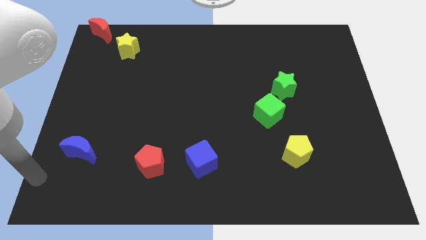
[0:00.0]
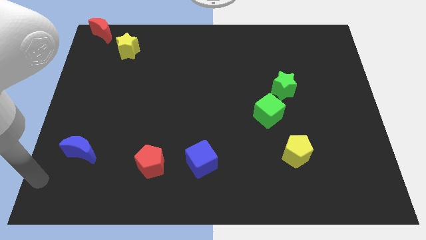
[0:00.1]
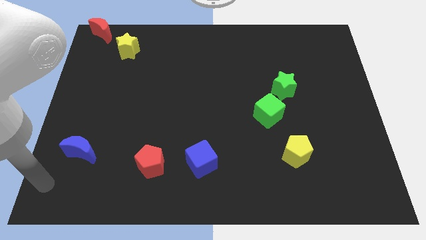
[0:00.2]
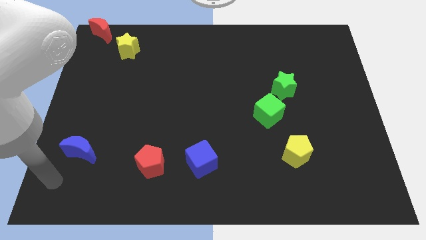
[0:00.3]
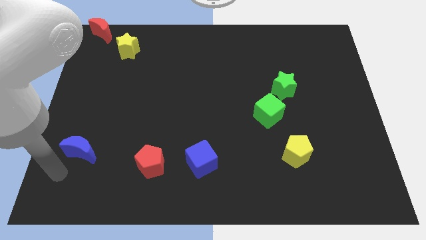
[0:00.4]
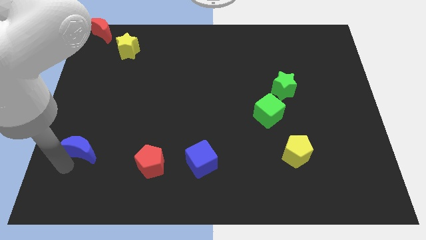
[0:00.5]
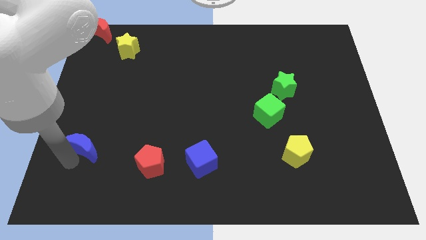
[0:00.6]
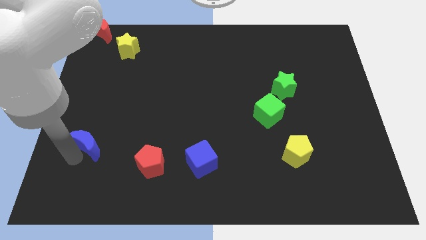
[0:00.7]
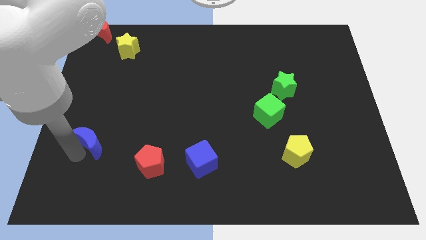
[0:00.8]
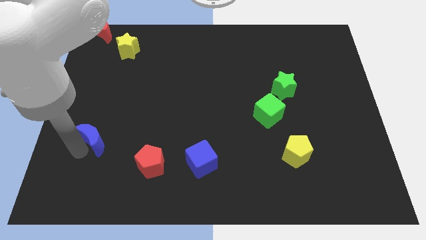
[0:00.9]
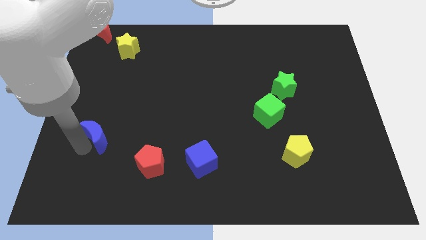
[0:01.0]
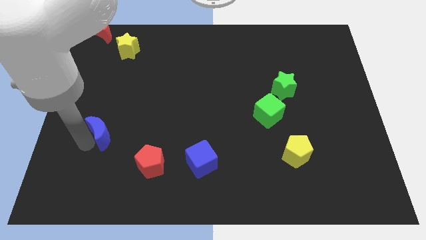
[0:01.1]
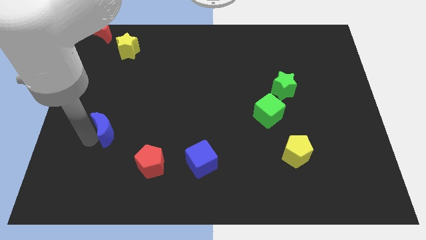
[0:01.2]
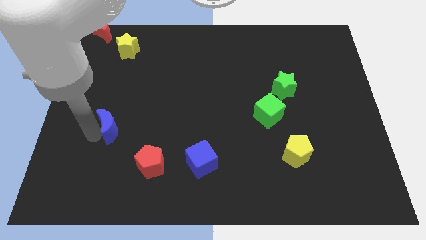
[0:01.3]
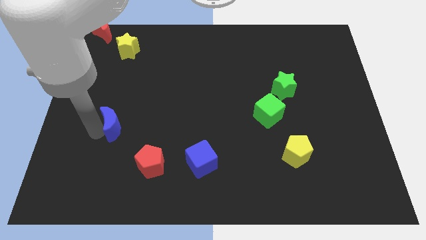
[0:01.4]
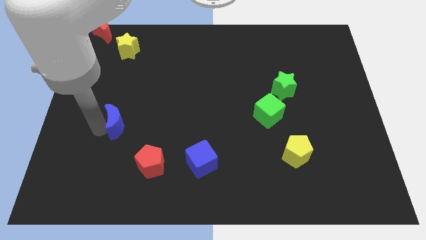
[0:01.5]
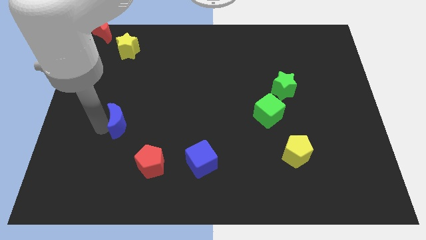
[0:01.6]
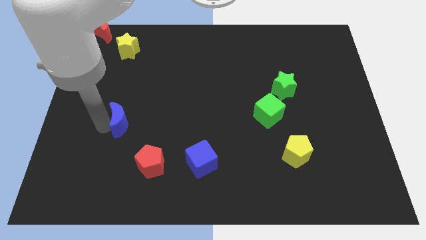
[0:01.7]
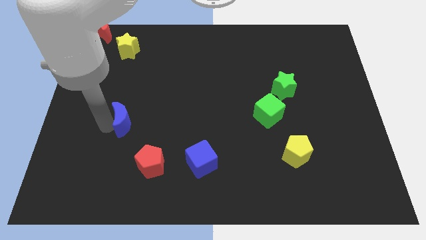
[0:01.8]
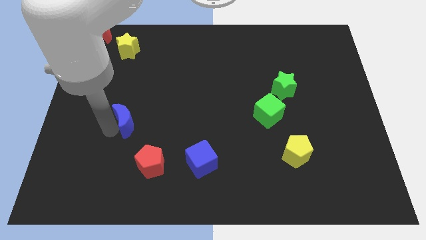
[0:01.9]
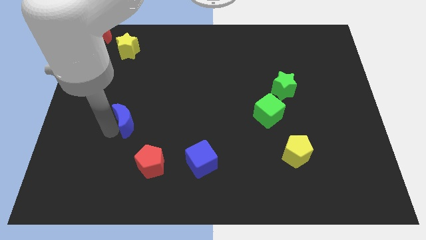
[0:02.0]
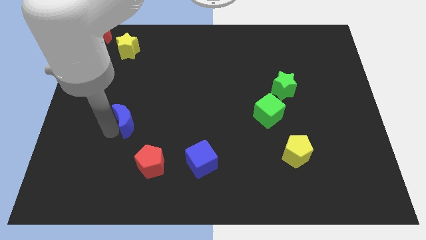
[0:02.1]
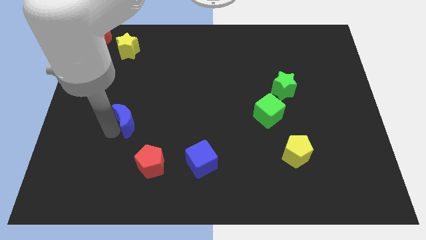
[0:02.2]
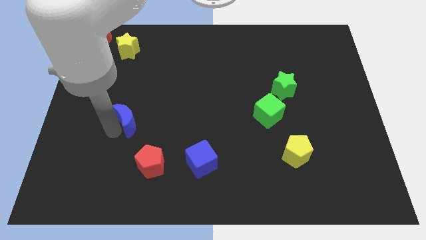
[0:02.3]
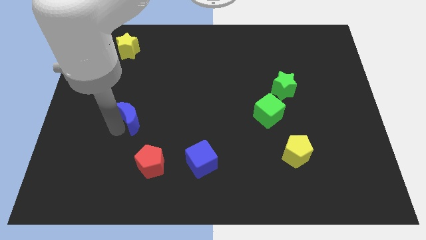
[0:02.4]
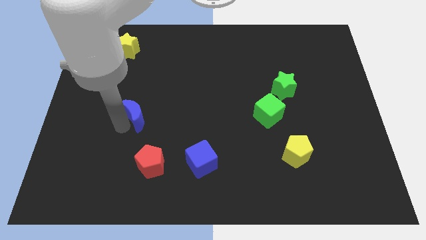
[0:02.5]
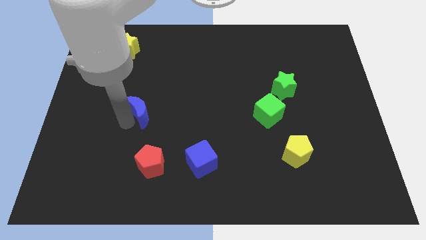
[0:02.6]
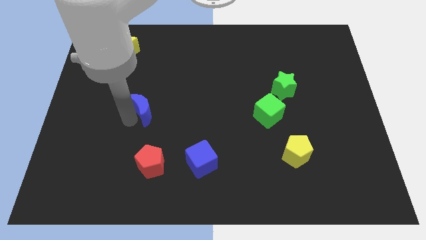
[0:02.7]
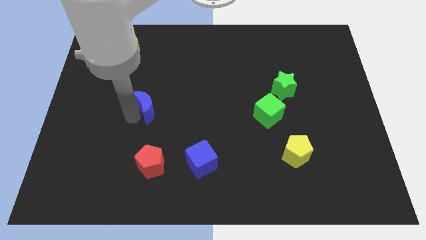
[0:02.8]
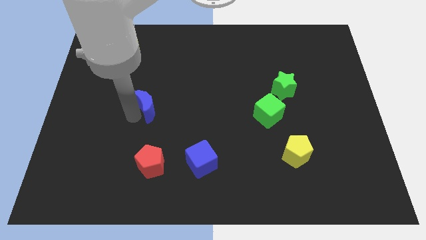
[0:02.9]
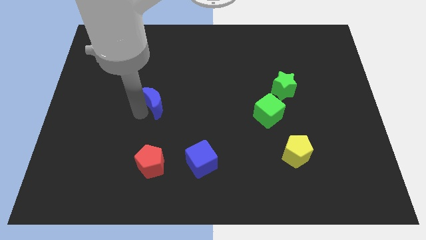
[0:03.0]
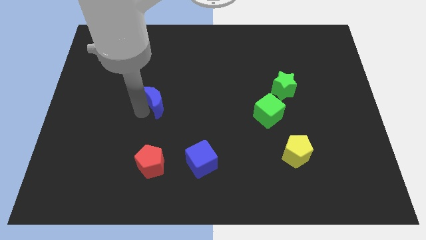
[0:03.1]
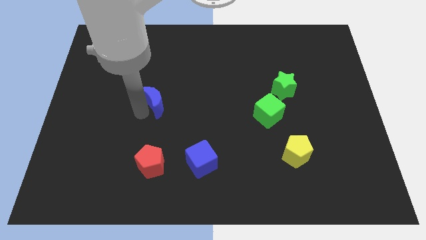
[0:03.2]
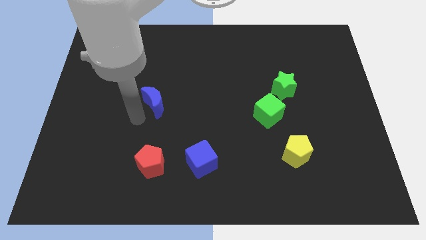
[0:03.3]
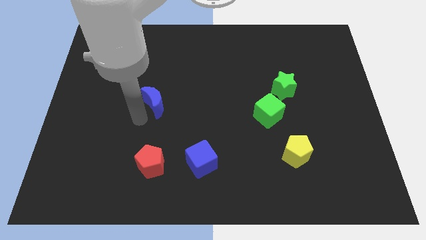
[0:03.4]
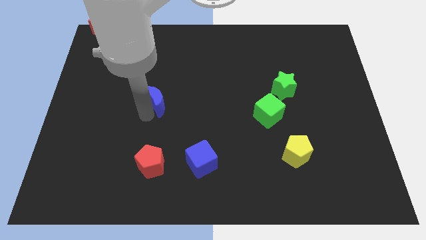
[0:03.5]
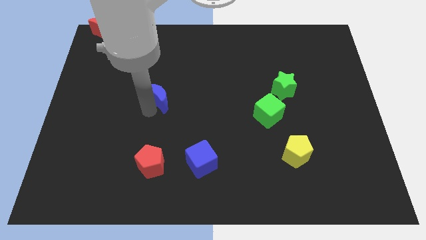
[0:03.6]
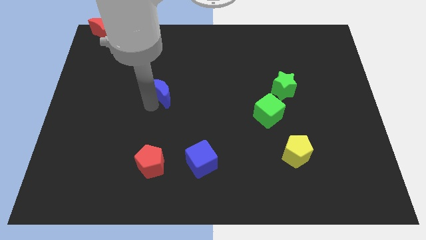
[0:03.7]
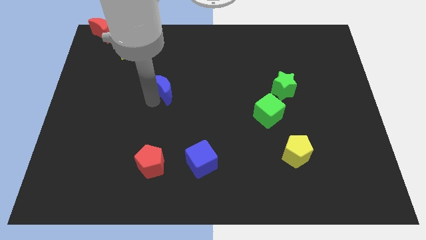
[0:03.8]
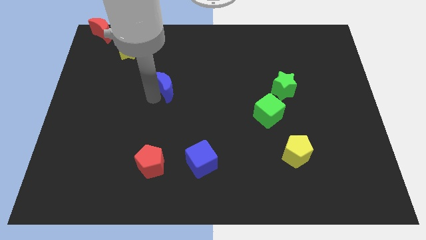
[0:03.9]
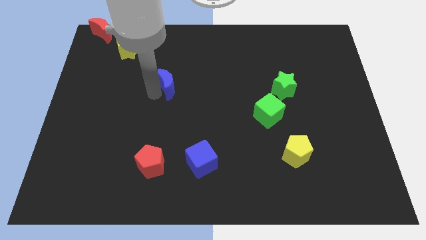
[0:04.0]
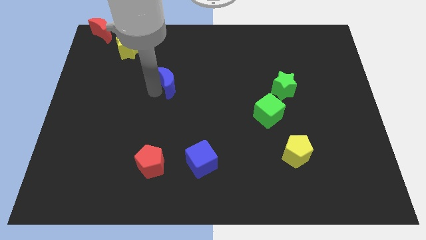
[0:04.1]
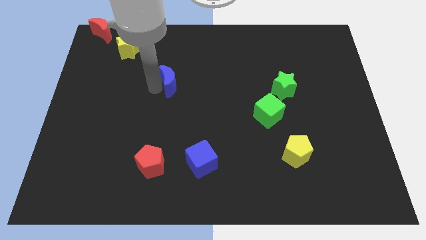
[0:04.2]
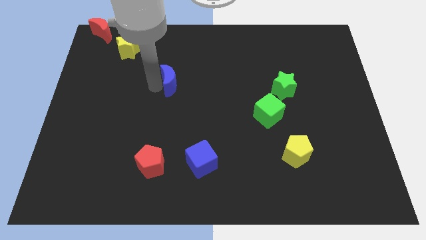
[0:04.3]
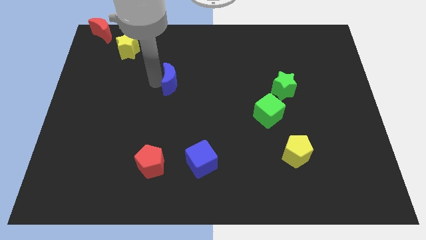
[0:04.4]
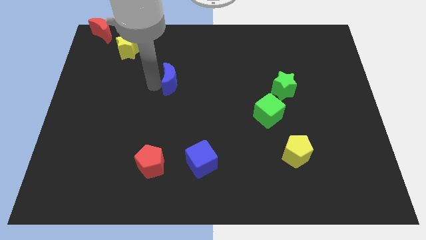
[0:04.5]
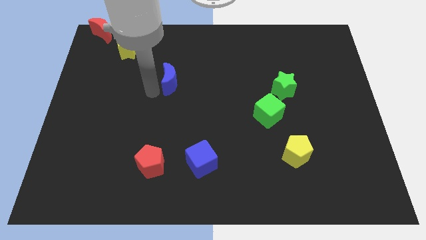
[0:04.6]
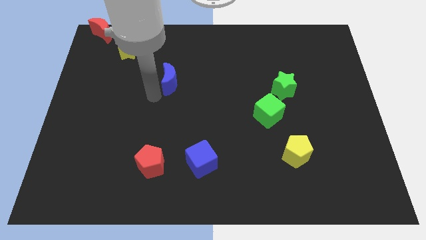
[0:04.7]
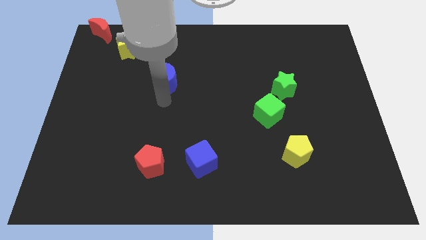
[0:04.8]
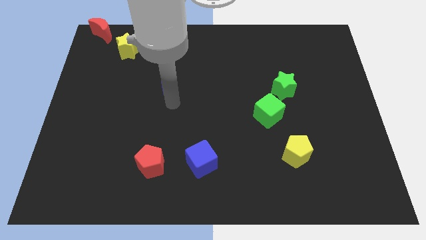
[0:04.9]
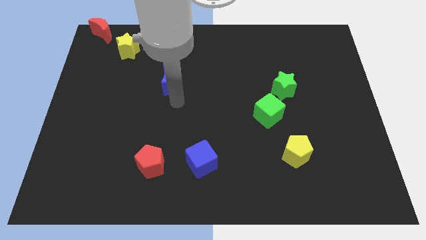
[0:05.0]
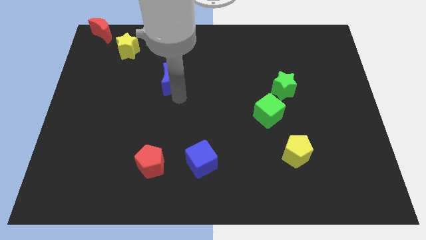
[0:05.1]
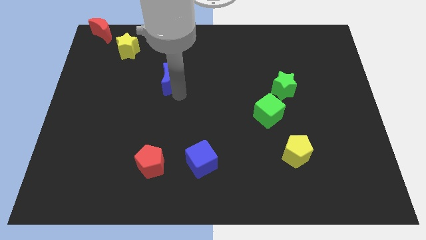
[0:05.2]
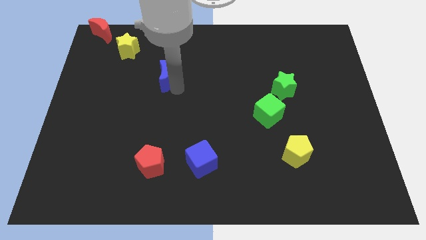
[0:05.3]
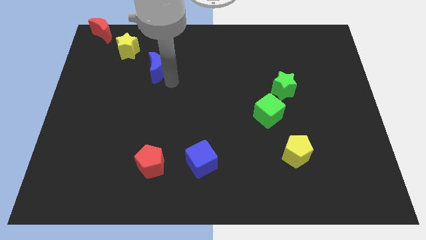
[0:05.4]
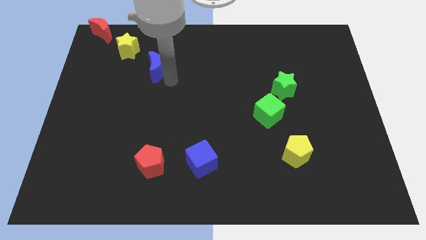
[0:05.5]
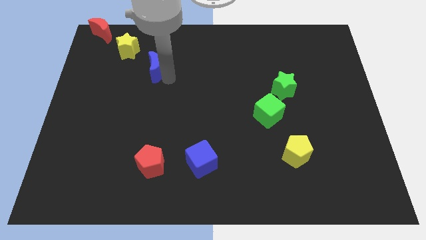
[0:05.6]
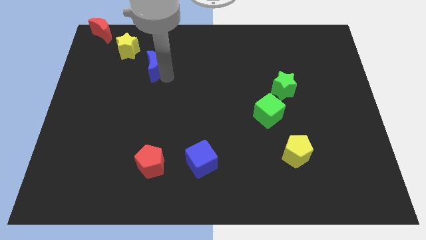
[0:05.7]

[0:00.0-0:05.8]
move blue moon diagonally below yellow star

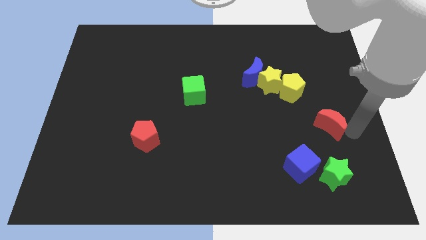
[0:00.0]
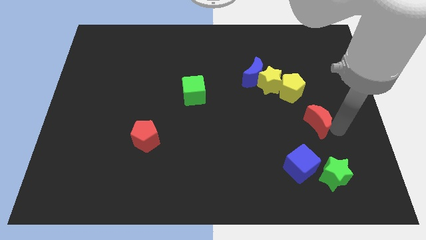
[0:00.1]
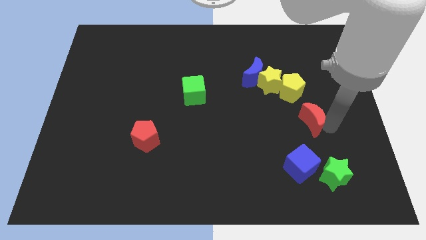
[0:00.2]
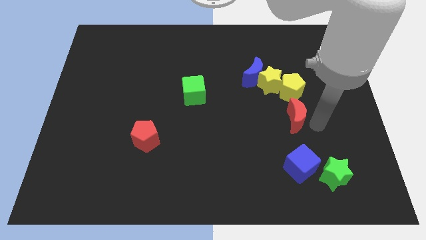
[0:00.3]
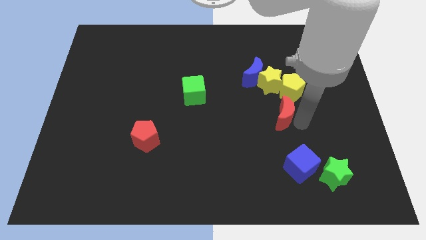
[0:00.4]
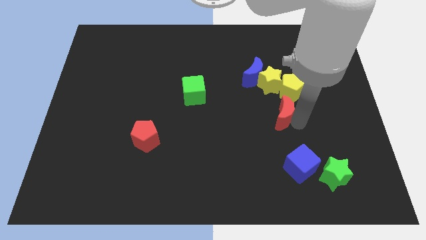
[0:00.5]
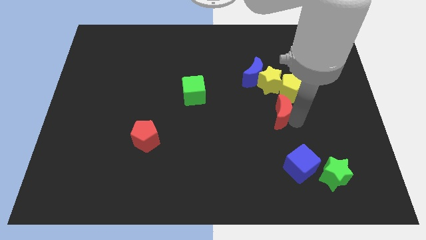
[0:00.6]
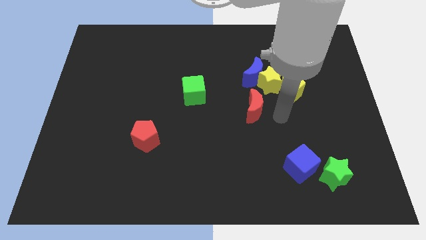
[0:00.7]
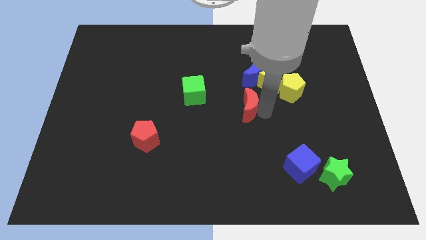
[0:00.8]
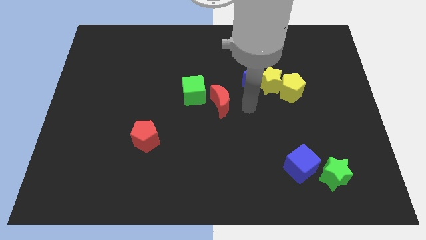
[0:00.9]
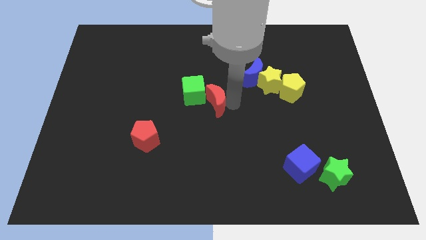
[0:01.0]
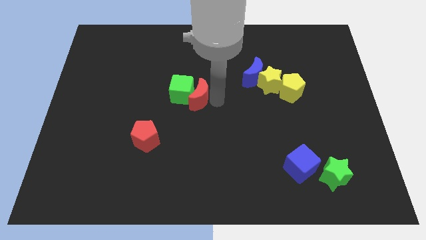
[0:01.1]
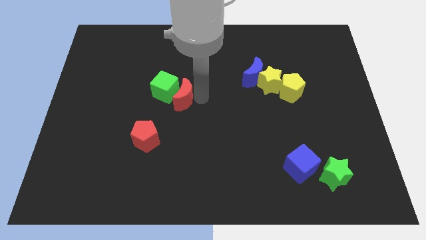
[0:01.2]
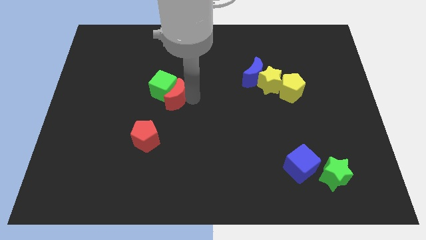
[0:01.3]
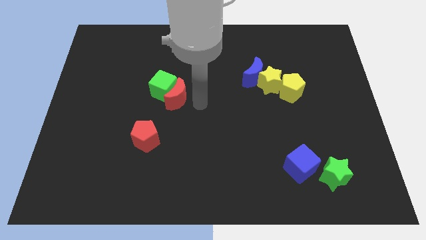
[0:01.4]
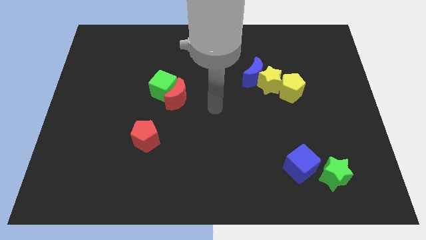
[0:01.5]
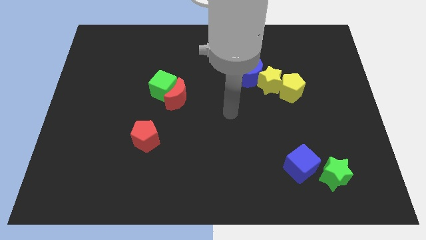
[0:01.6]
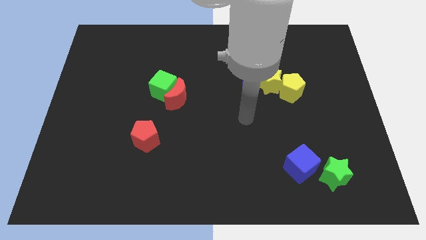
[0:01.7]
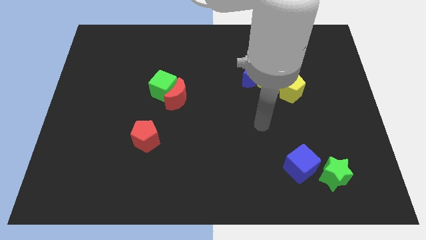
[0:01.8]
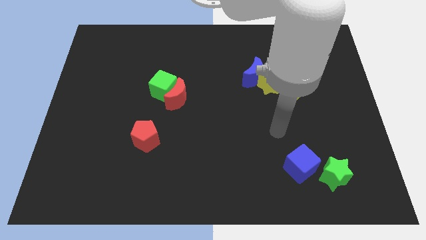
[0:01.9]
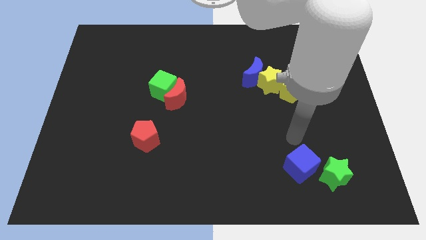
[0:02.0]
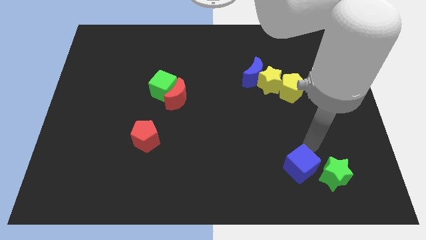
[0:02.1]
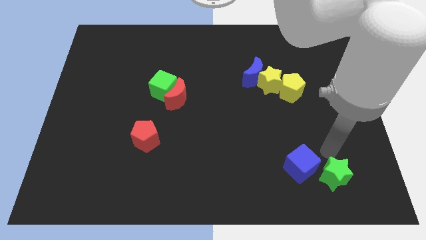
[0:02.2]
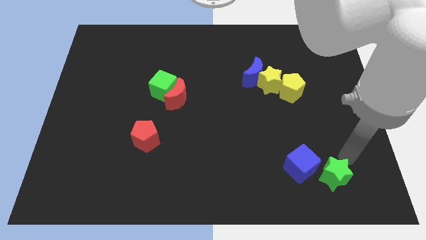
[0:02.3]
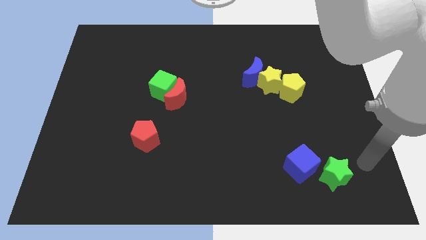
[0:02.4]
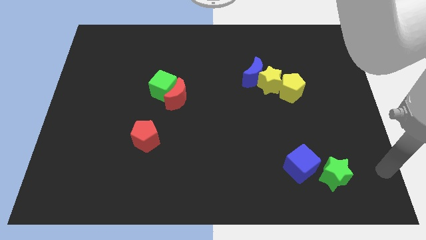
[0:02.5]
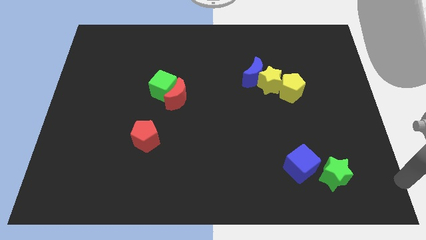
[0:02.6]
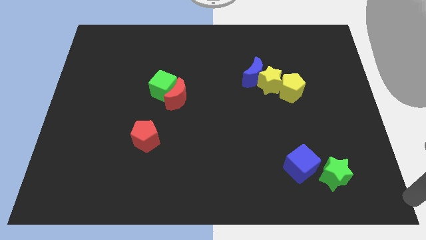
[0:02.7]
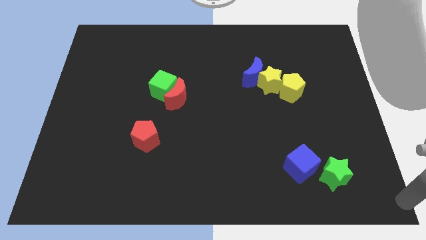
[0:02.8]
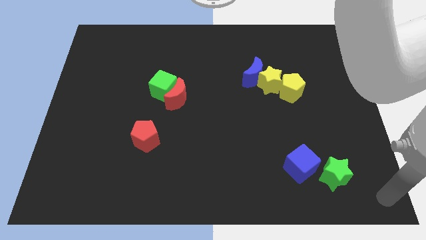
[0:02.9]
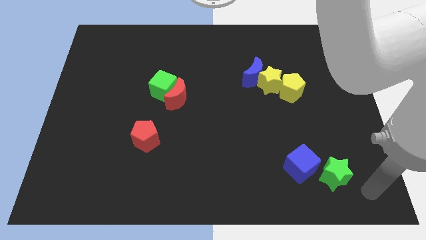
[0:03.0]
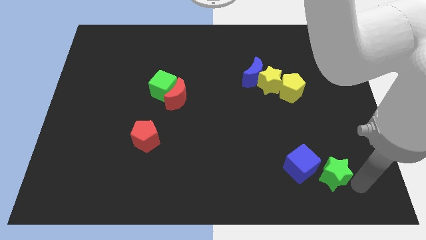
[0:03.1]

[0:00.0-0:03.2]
move the red crescent close to the green cube

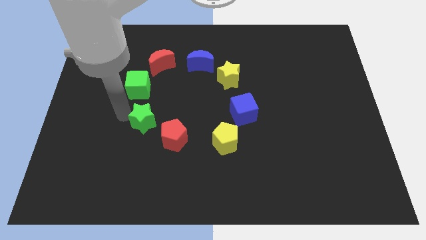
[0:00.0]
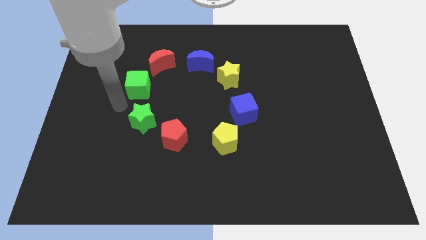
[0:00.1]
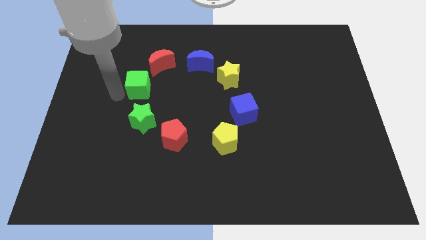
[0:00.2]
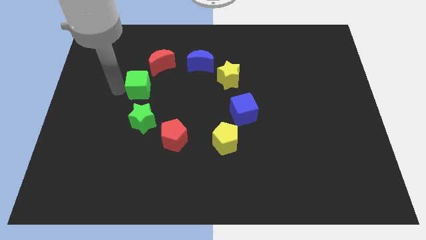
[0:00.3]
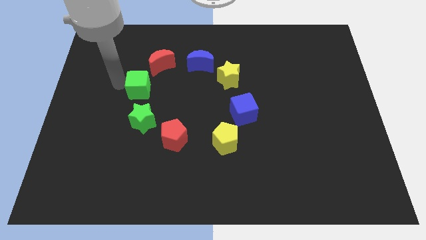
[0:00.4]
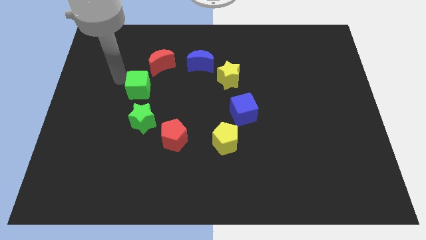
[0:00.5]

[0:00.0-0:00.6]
place the arm left to the green cube
